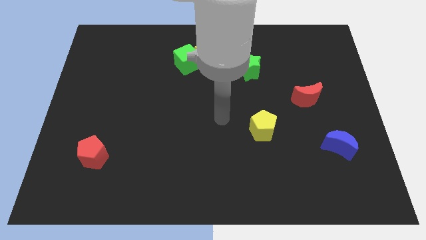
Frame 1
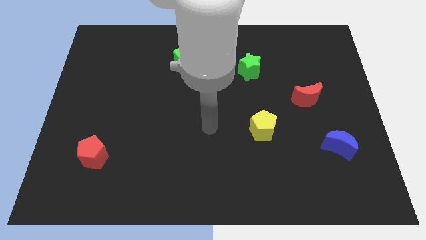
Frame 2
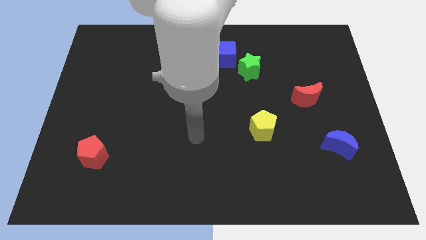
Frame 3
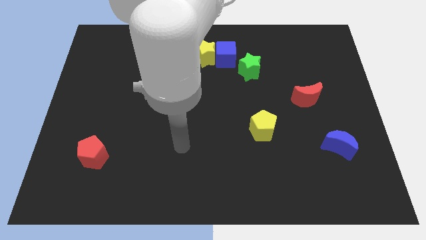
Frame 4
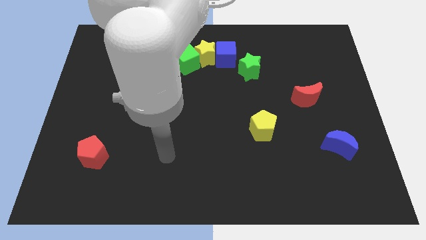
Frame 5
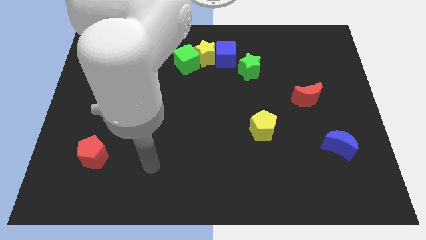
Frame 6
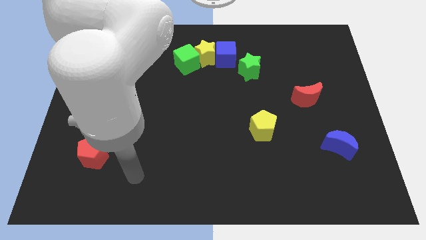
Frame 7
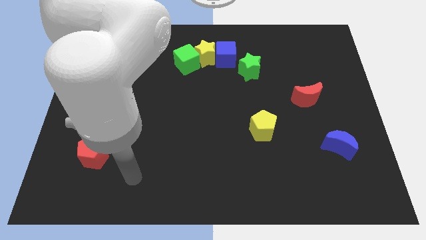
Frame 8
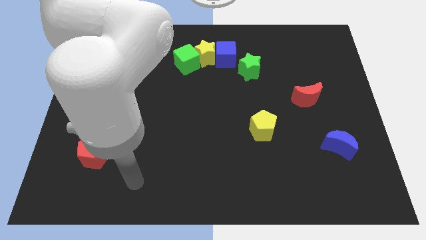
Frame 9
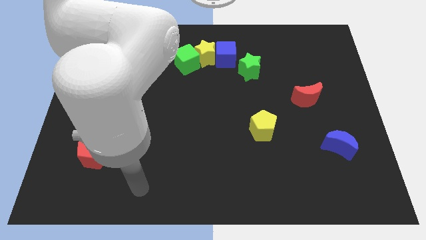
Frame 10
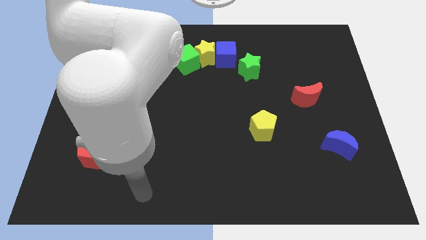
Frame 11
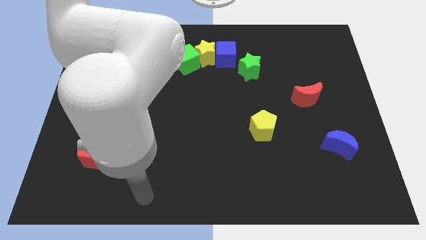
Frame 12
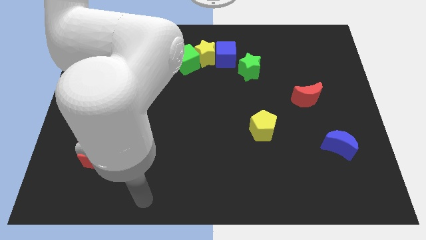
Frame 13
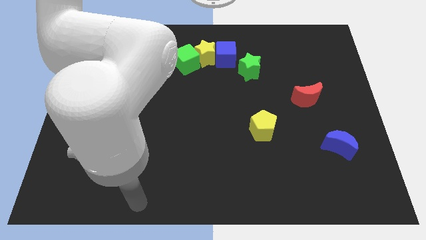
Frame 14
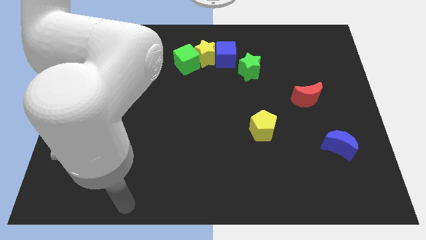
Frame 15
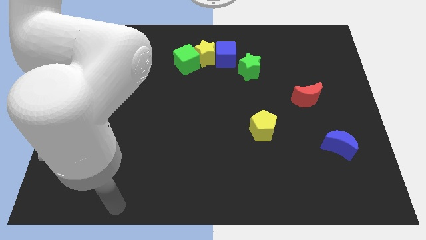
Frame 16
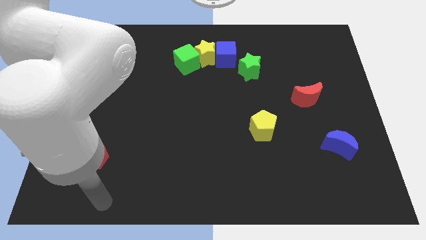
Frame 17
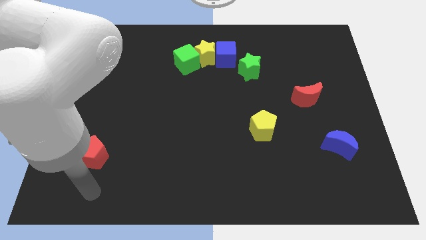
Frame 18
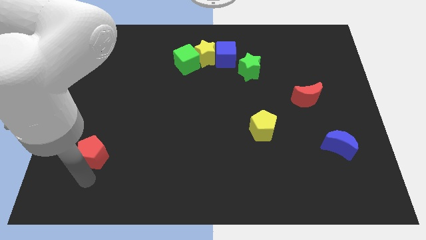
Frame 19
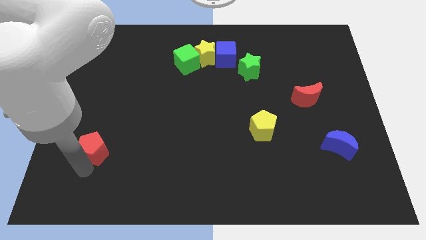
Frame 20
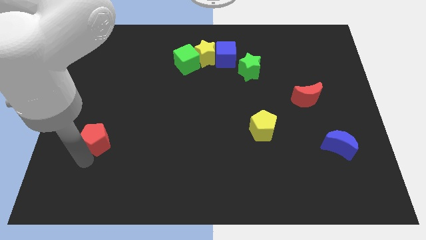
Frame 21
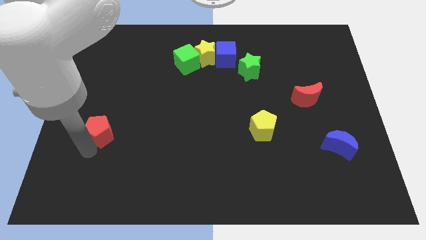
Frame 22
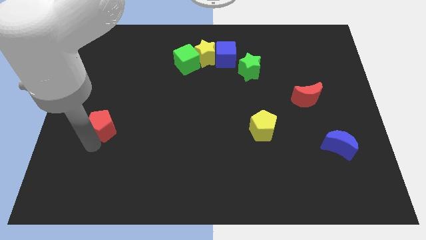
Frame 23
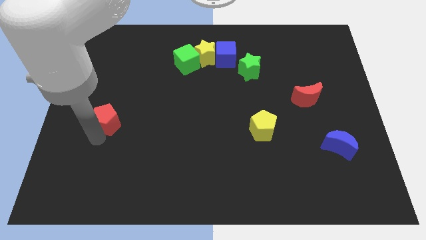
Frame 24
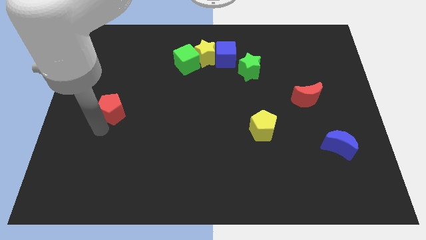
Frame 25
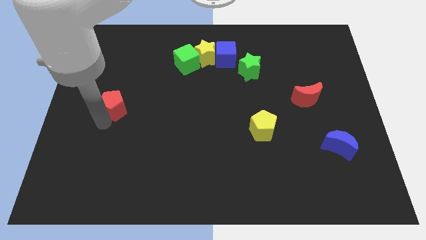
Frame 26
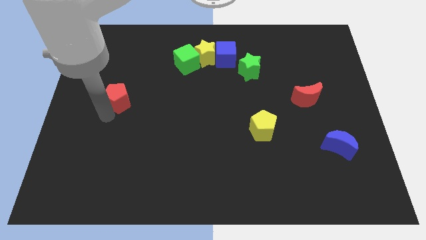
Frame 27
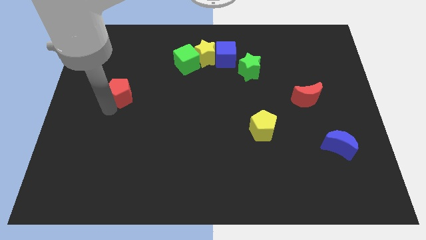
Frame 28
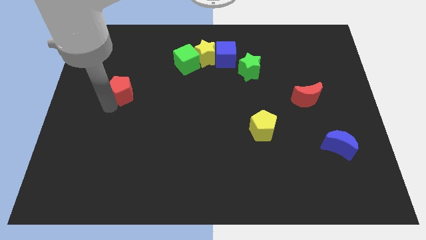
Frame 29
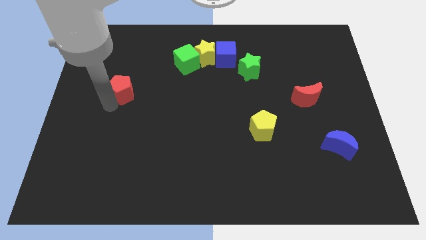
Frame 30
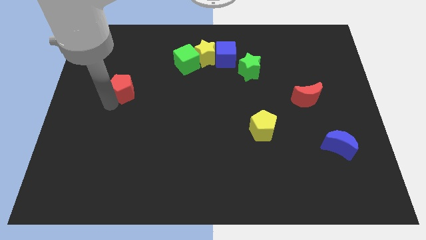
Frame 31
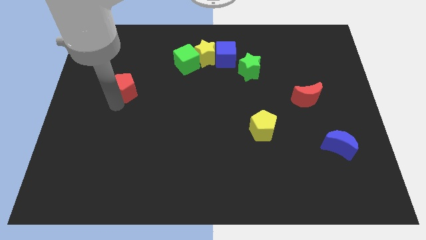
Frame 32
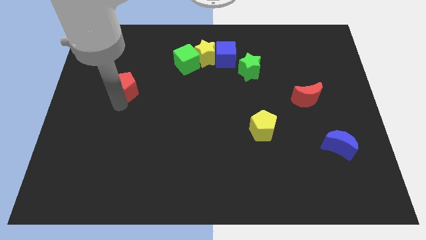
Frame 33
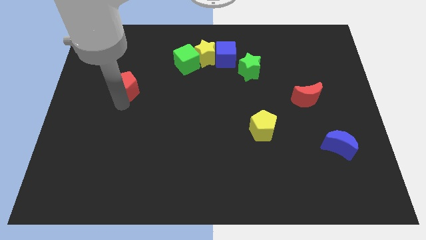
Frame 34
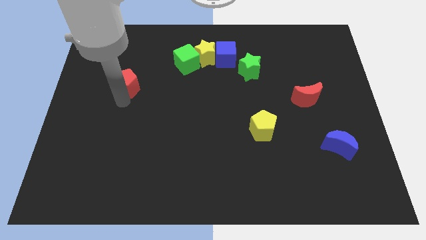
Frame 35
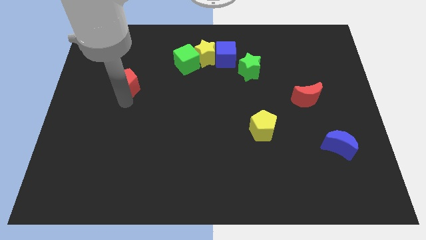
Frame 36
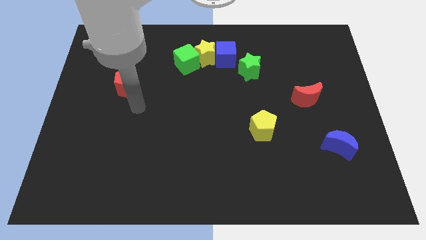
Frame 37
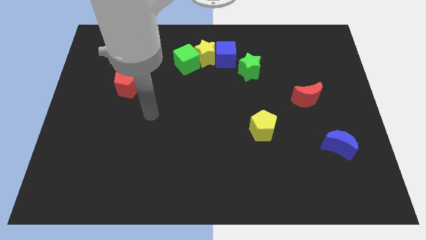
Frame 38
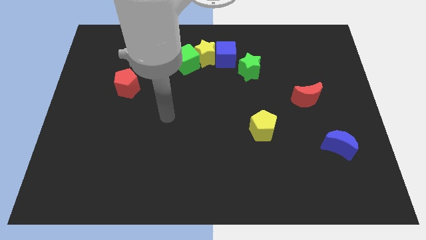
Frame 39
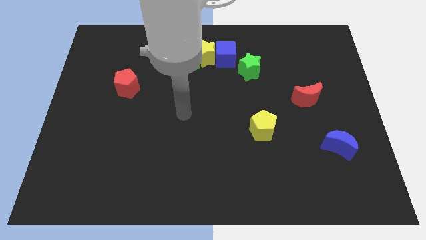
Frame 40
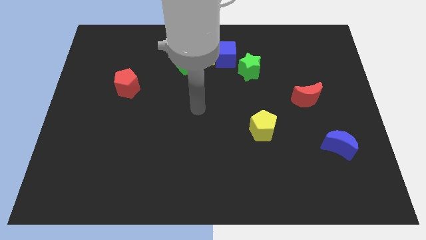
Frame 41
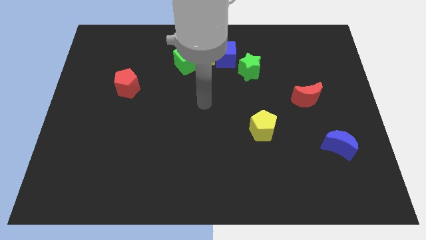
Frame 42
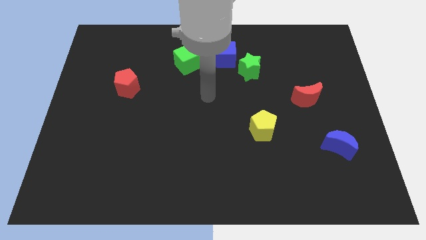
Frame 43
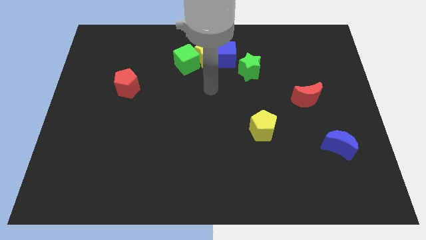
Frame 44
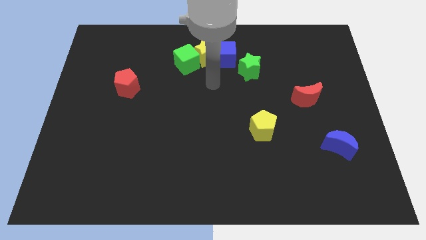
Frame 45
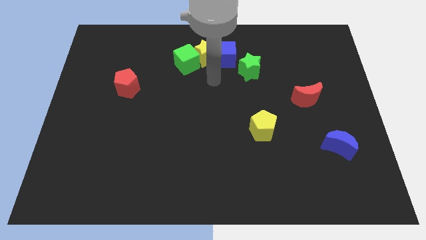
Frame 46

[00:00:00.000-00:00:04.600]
place the red pentagon left to the red moon

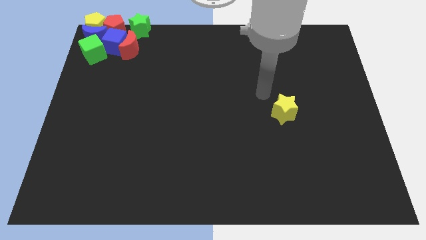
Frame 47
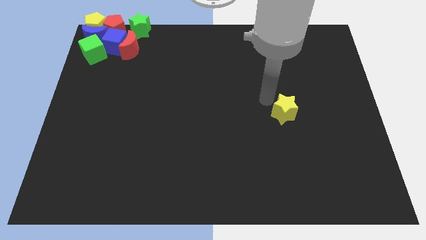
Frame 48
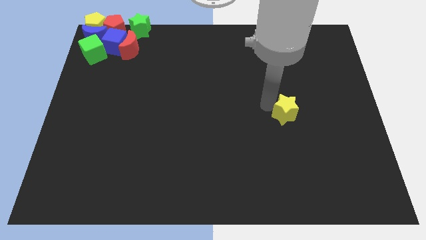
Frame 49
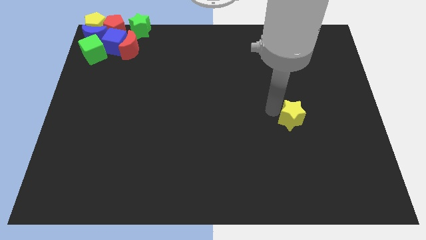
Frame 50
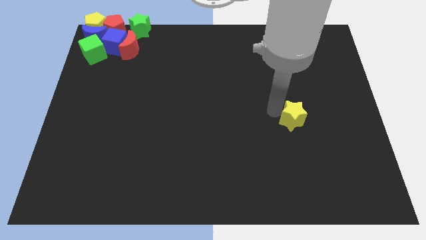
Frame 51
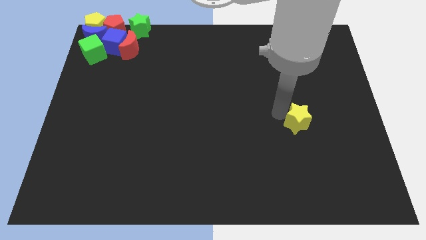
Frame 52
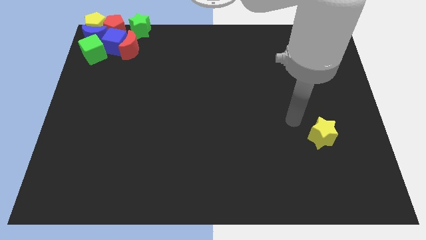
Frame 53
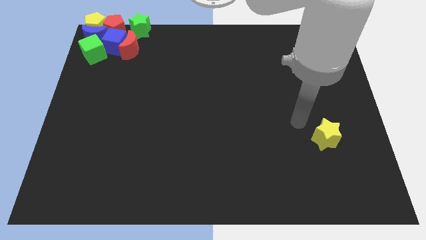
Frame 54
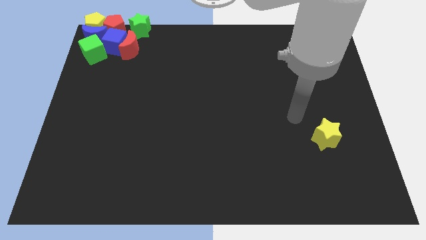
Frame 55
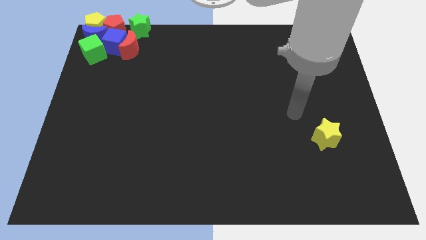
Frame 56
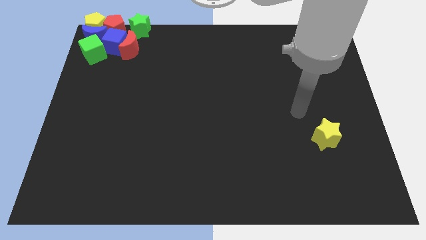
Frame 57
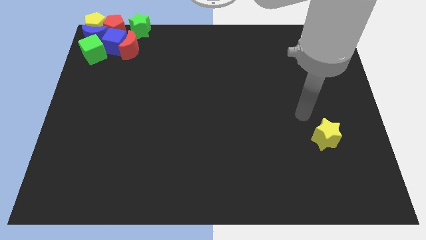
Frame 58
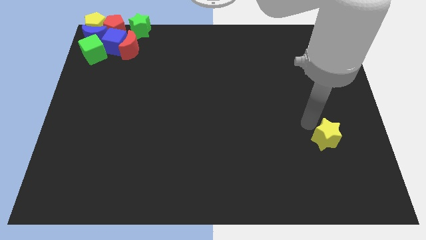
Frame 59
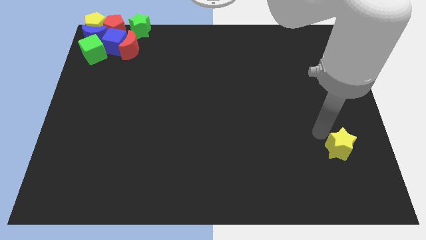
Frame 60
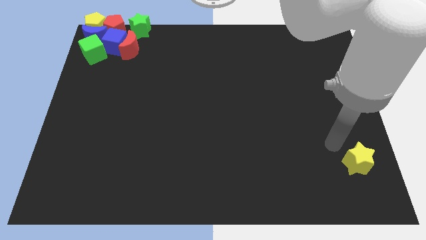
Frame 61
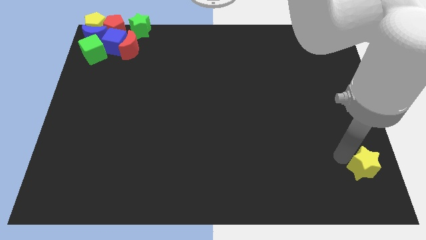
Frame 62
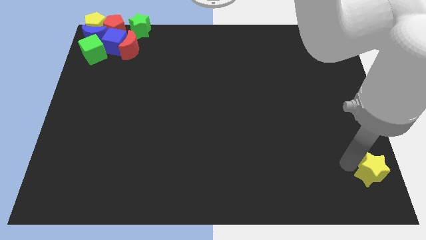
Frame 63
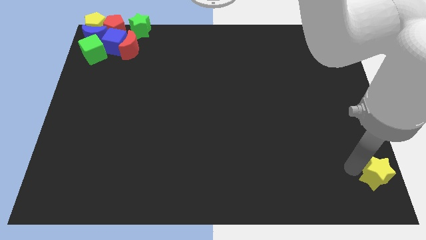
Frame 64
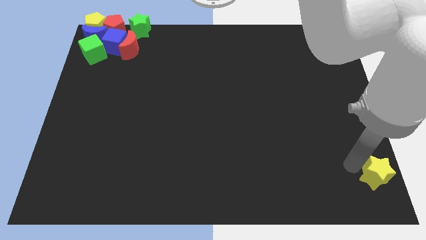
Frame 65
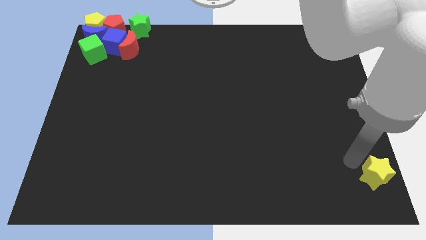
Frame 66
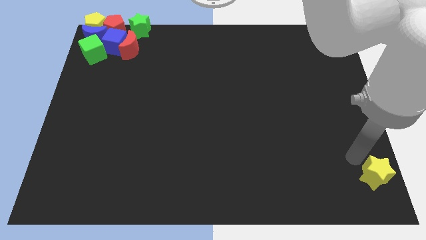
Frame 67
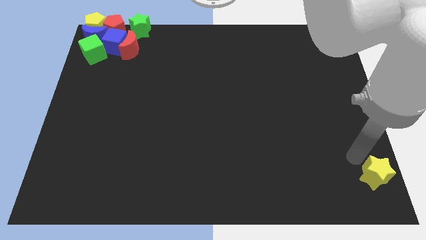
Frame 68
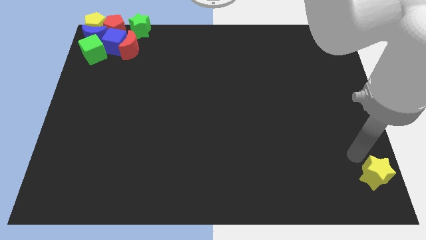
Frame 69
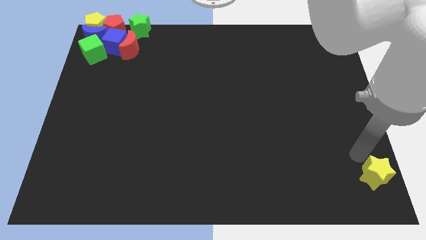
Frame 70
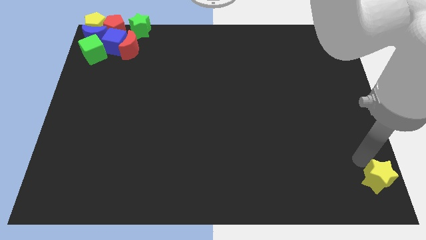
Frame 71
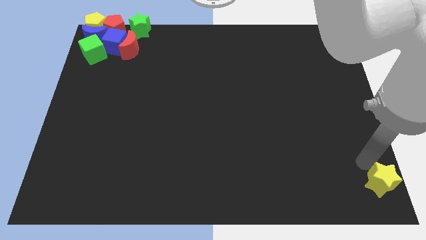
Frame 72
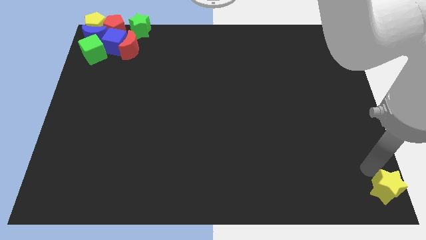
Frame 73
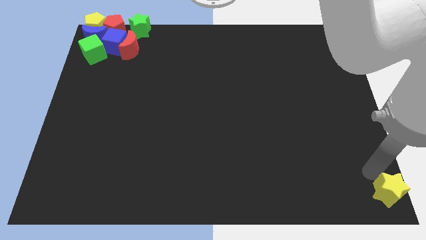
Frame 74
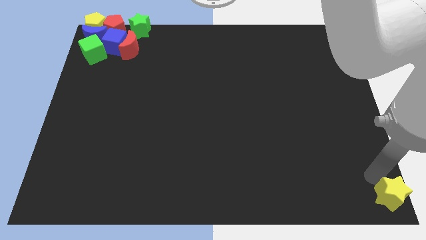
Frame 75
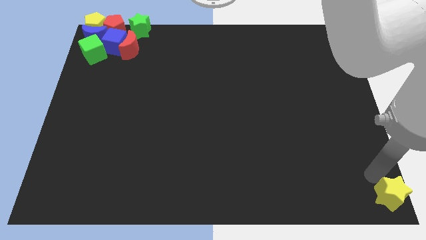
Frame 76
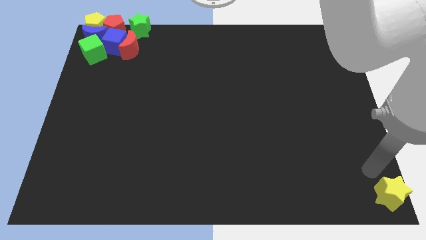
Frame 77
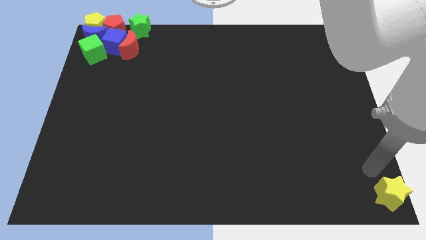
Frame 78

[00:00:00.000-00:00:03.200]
push the yellow star to the bottom right corner

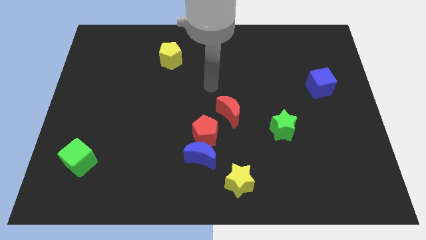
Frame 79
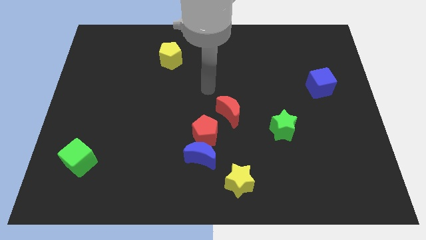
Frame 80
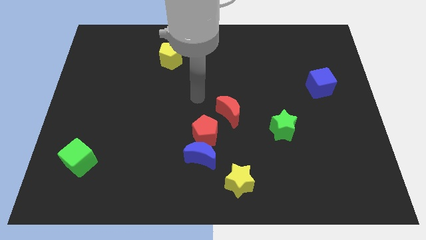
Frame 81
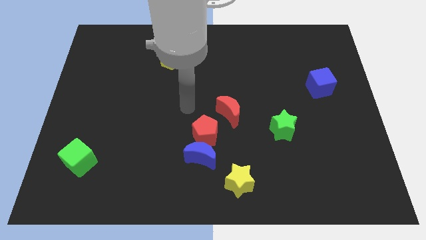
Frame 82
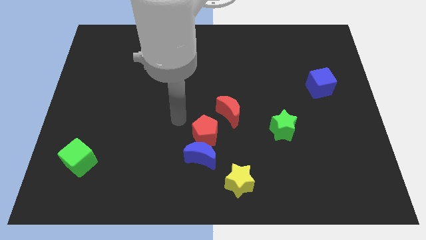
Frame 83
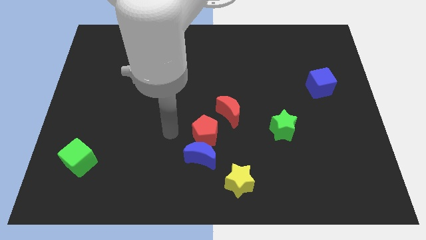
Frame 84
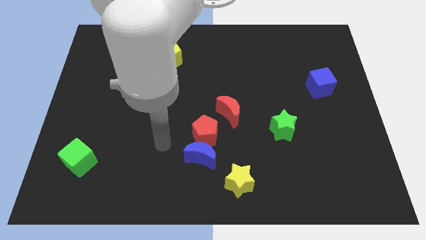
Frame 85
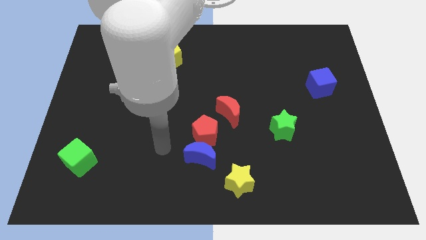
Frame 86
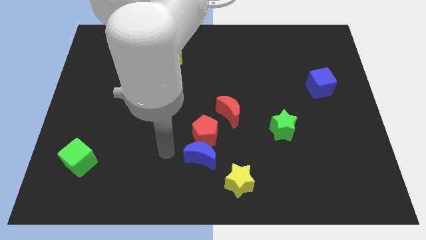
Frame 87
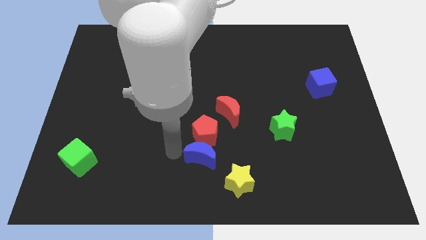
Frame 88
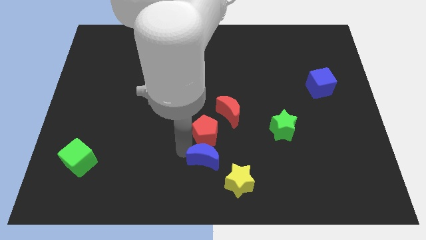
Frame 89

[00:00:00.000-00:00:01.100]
touch the left of the blue moon
